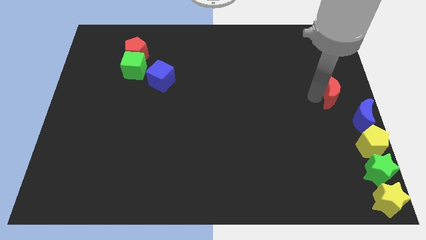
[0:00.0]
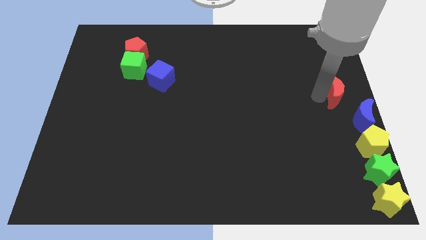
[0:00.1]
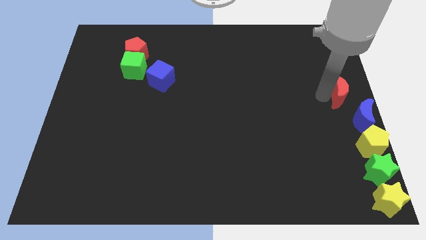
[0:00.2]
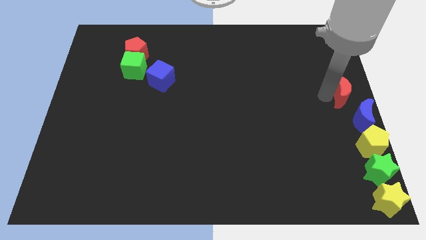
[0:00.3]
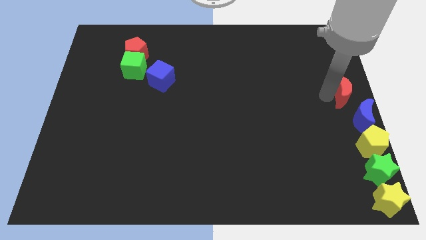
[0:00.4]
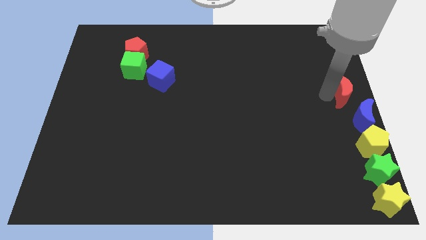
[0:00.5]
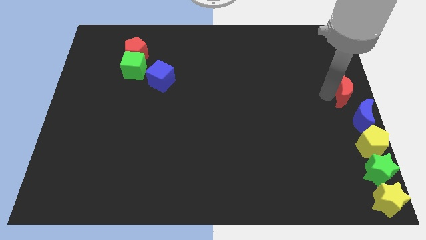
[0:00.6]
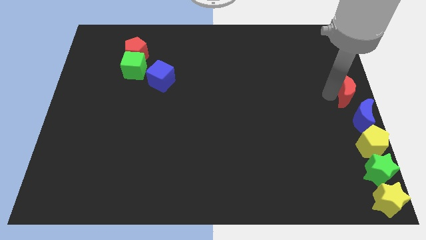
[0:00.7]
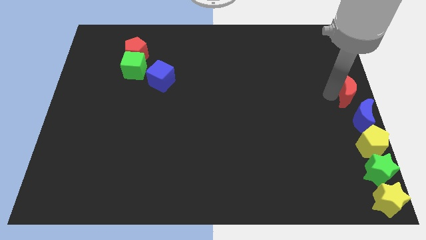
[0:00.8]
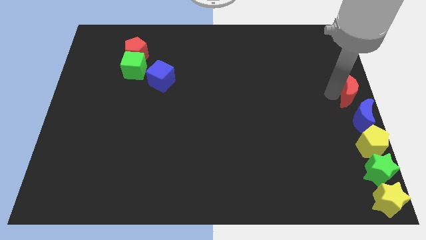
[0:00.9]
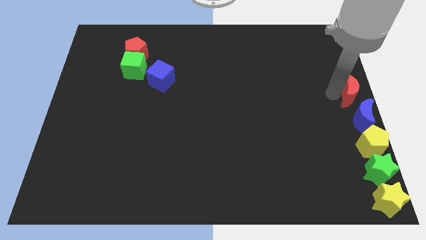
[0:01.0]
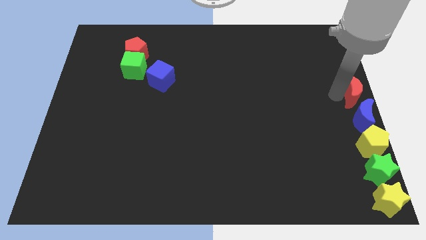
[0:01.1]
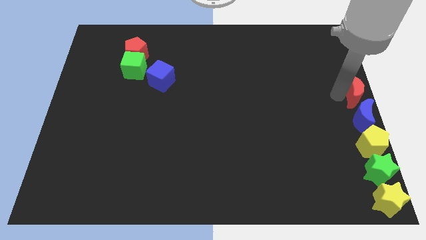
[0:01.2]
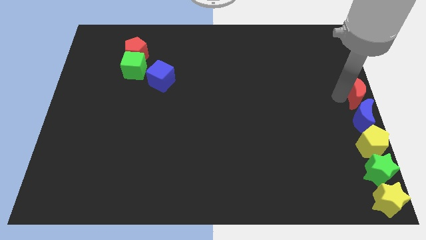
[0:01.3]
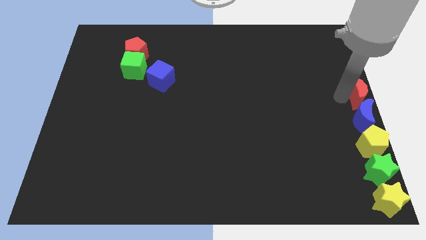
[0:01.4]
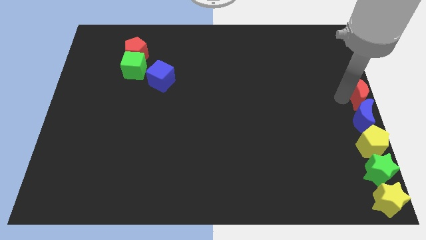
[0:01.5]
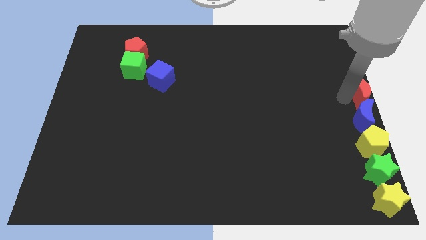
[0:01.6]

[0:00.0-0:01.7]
push the red crescent to the top of the blue crescent

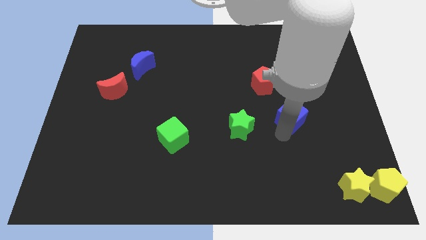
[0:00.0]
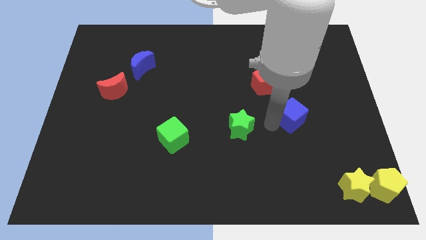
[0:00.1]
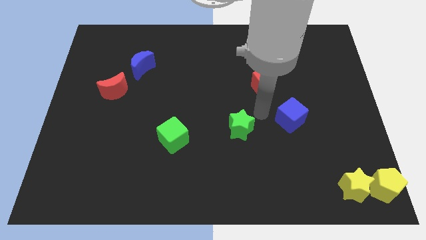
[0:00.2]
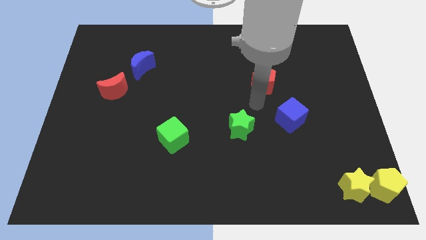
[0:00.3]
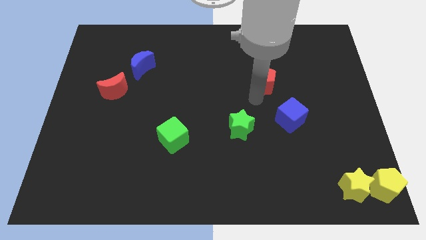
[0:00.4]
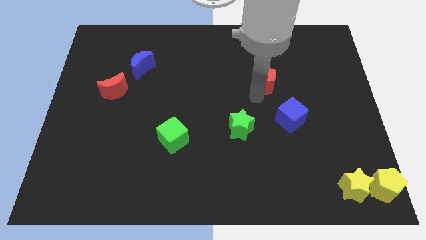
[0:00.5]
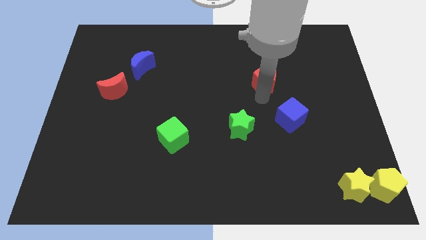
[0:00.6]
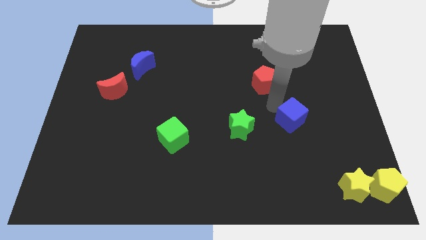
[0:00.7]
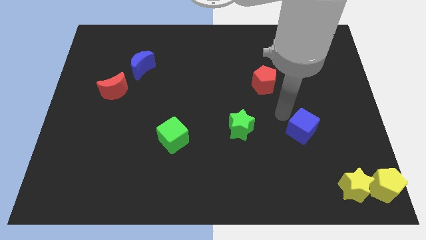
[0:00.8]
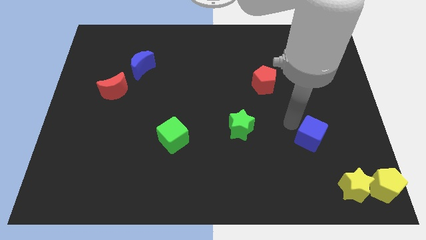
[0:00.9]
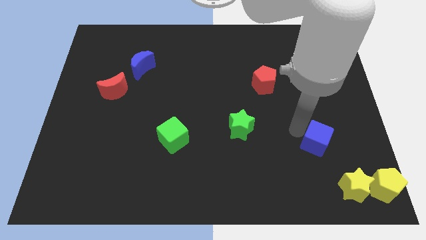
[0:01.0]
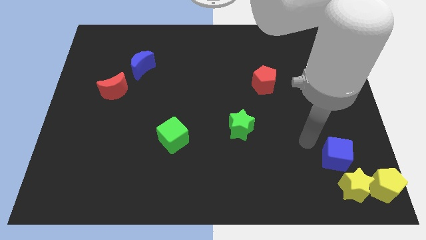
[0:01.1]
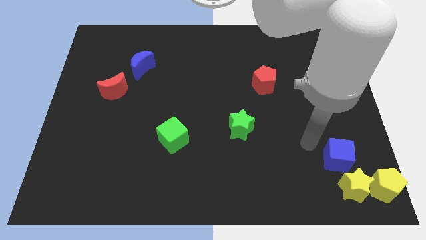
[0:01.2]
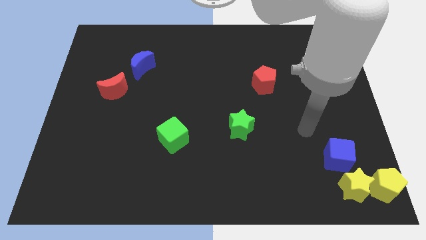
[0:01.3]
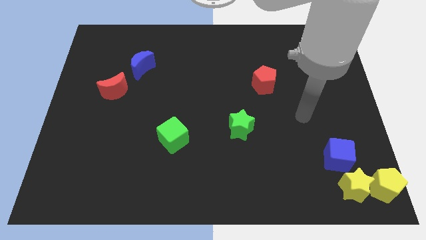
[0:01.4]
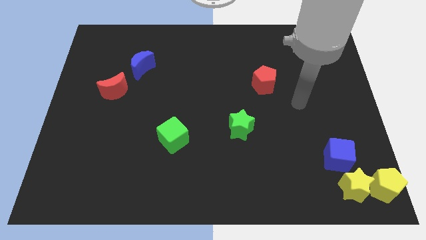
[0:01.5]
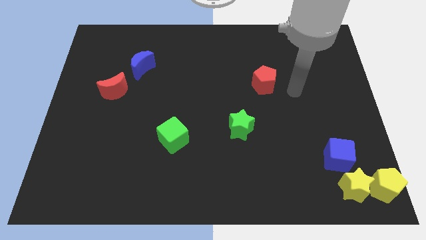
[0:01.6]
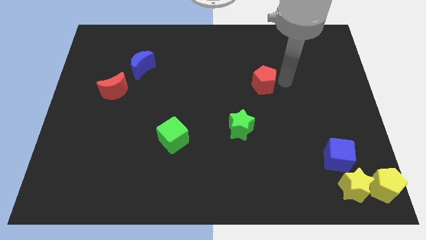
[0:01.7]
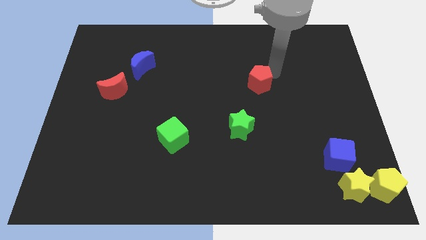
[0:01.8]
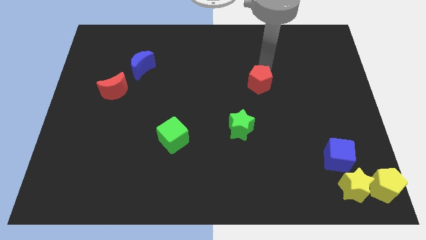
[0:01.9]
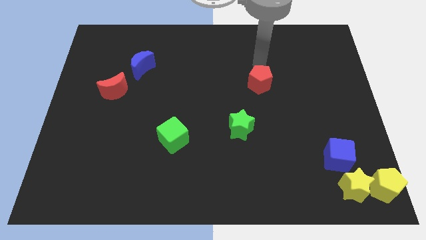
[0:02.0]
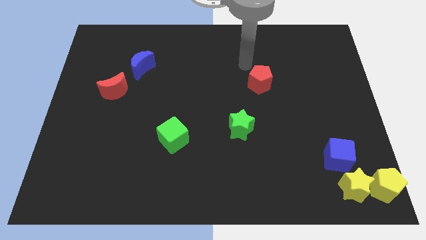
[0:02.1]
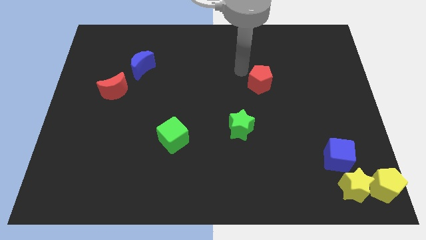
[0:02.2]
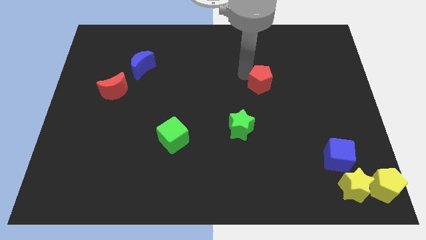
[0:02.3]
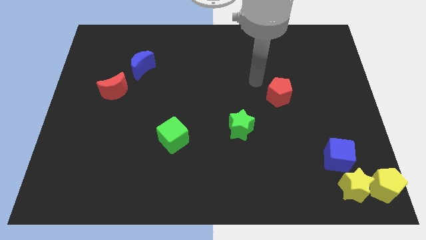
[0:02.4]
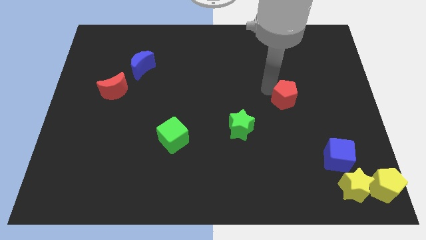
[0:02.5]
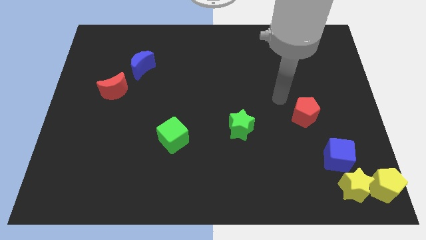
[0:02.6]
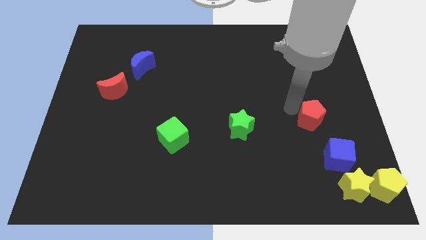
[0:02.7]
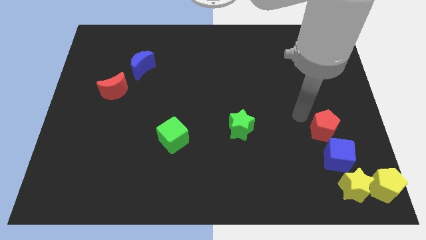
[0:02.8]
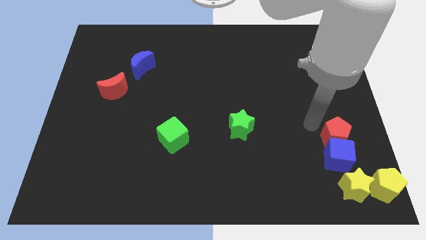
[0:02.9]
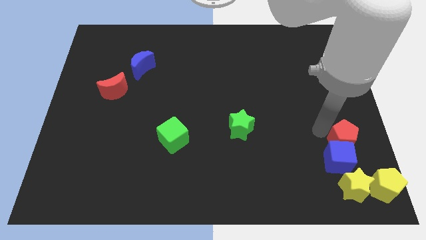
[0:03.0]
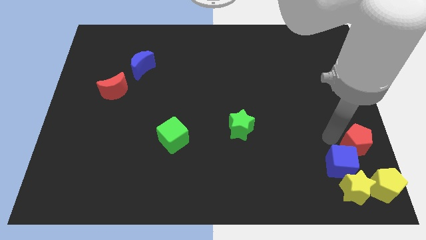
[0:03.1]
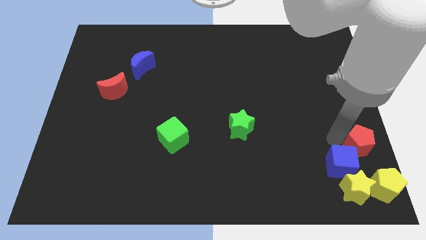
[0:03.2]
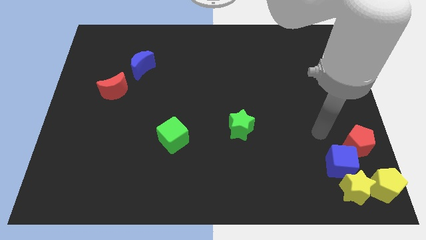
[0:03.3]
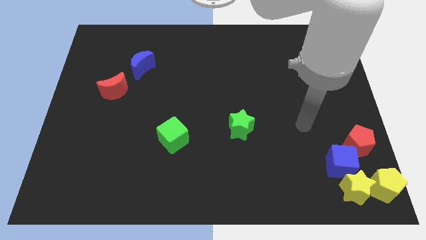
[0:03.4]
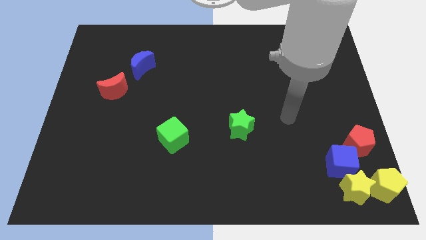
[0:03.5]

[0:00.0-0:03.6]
place the blue cube and the red pentagon above the yellow blocks

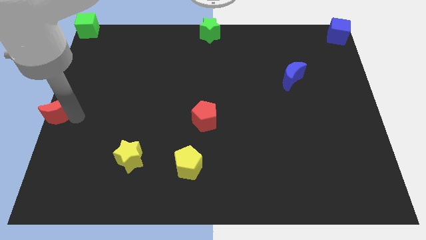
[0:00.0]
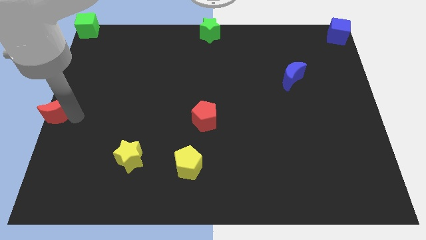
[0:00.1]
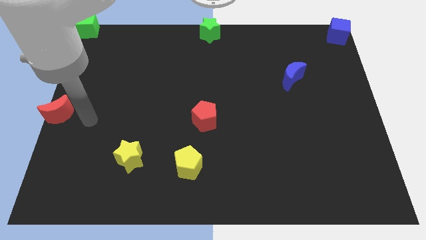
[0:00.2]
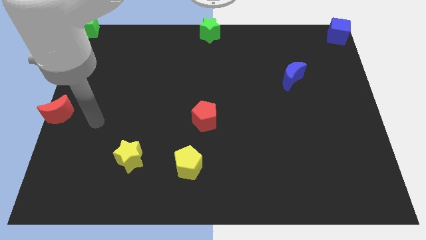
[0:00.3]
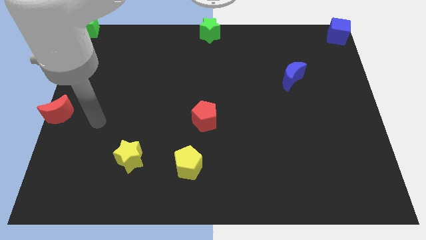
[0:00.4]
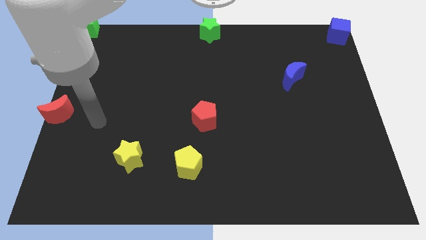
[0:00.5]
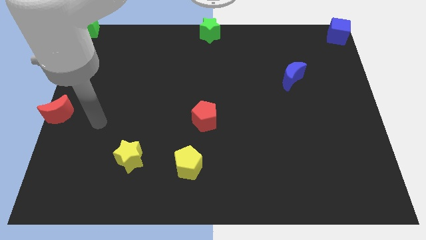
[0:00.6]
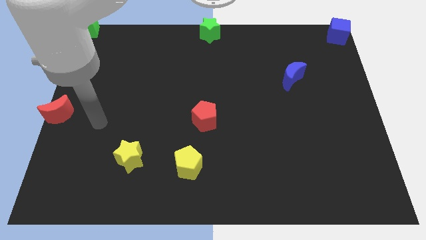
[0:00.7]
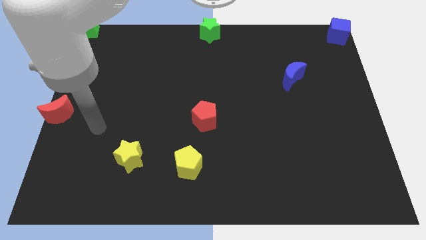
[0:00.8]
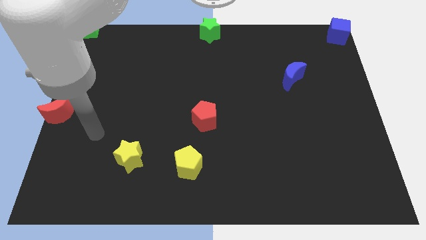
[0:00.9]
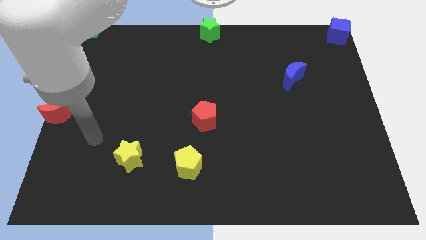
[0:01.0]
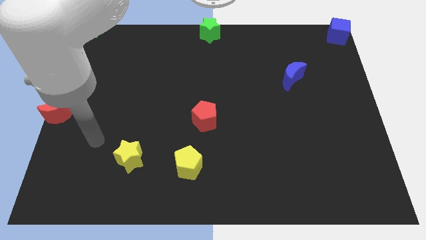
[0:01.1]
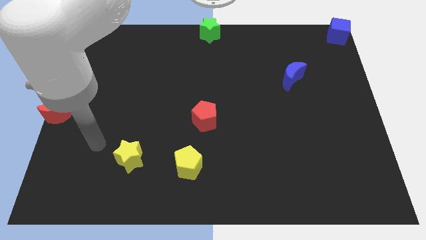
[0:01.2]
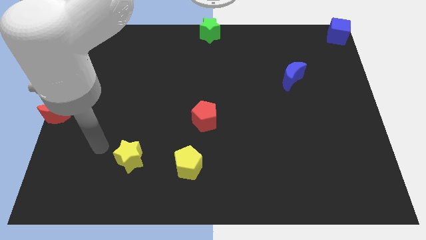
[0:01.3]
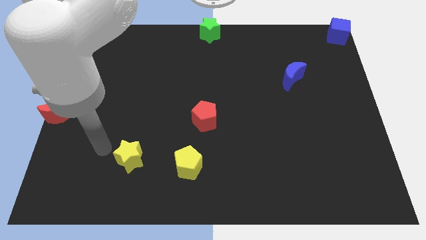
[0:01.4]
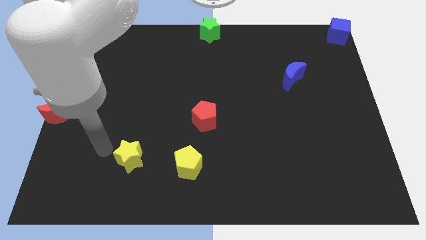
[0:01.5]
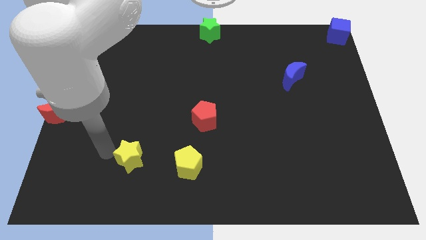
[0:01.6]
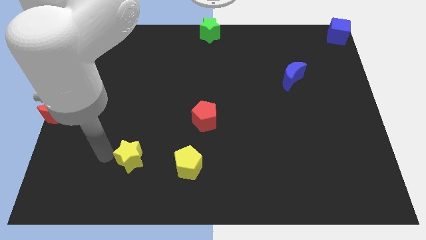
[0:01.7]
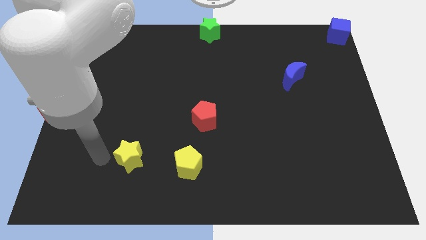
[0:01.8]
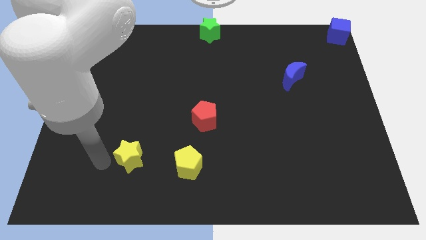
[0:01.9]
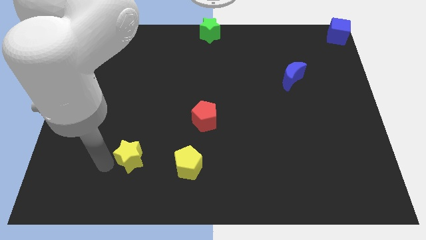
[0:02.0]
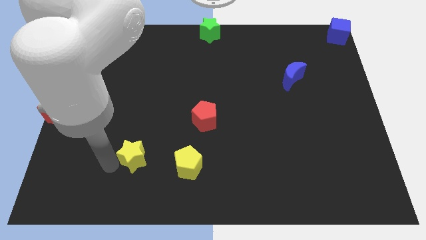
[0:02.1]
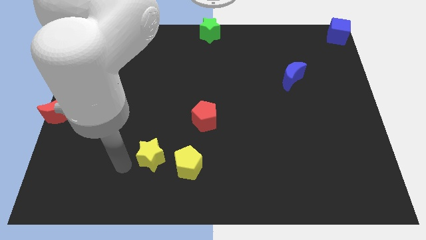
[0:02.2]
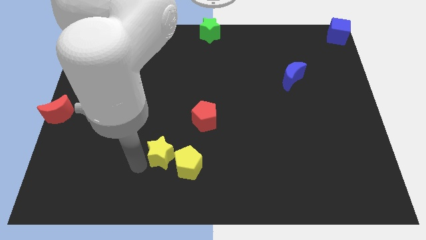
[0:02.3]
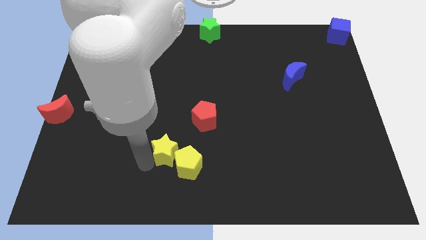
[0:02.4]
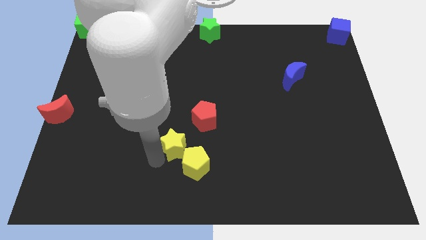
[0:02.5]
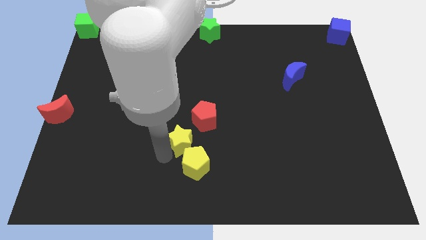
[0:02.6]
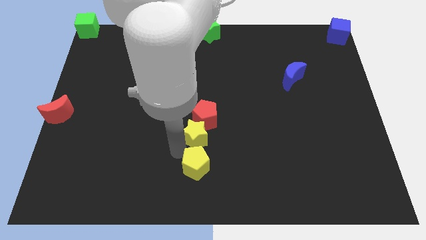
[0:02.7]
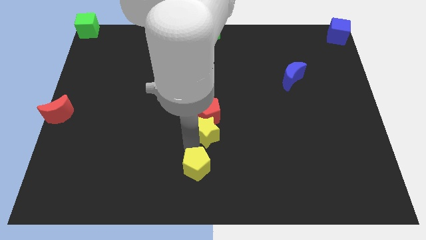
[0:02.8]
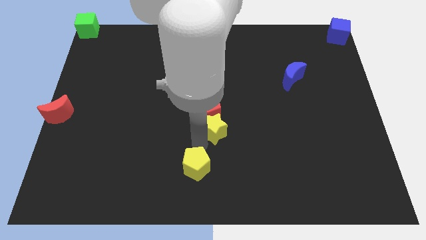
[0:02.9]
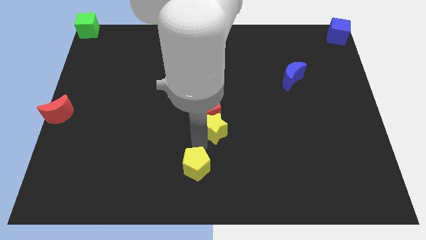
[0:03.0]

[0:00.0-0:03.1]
place yellow star below the red pentagon

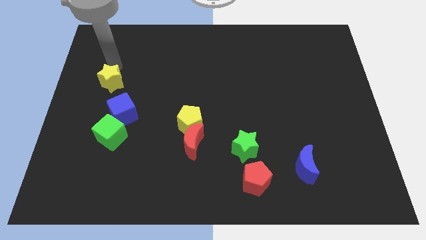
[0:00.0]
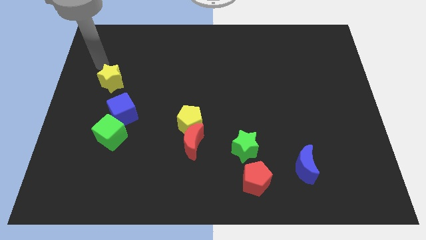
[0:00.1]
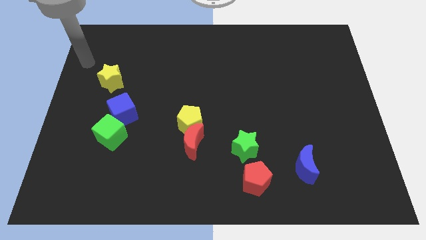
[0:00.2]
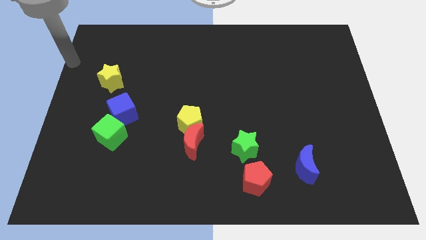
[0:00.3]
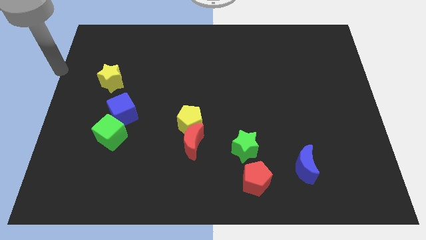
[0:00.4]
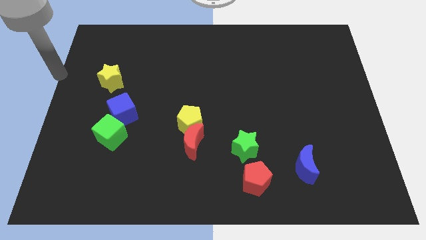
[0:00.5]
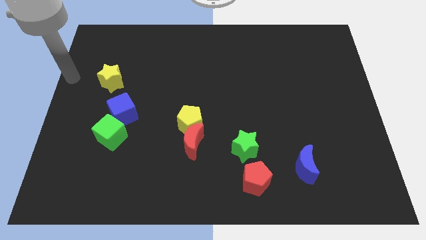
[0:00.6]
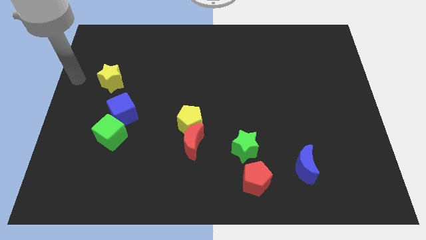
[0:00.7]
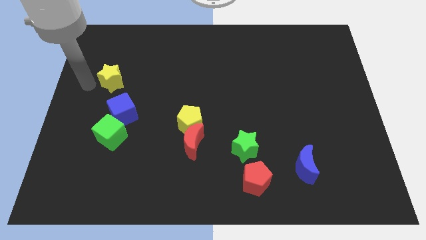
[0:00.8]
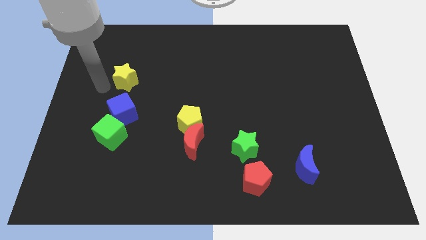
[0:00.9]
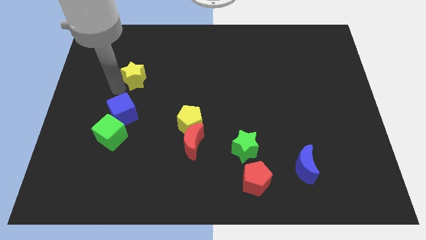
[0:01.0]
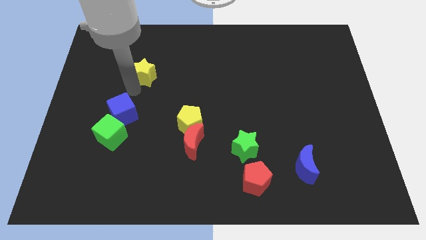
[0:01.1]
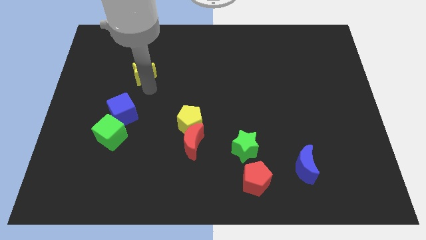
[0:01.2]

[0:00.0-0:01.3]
push the yellow star to the top right of the blue cube
